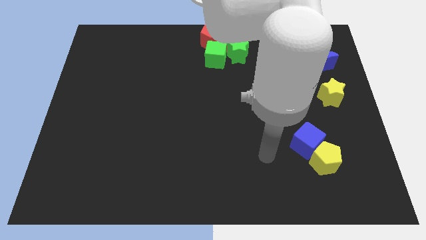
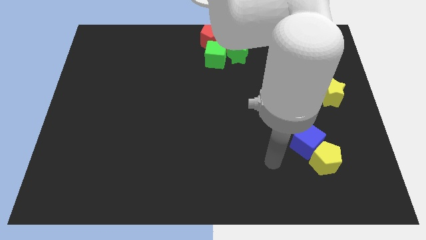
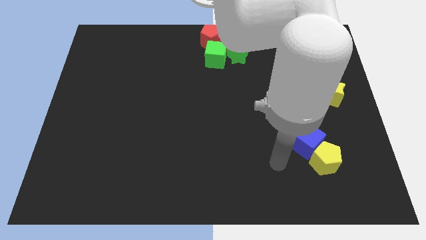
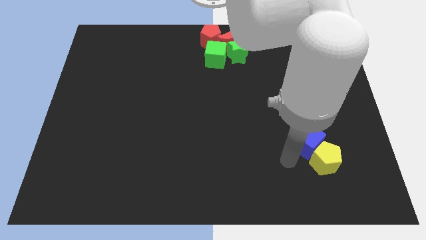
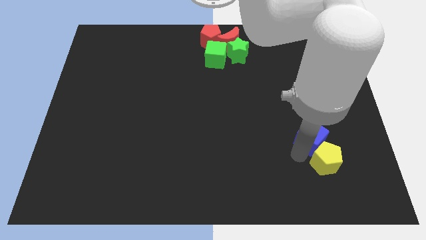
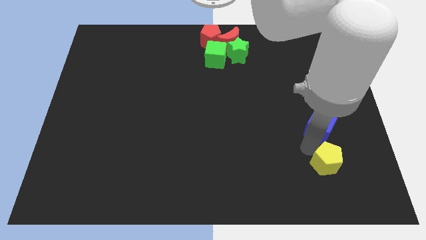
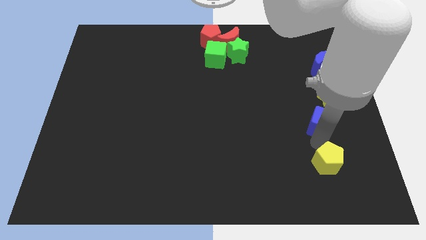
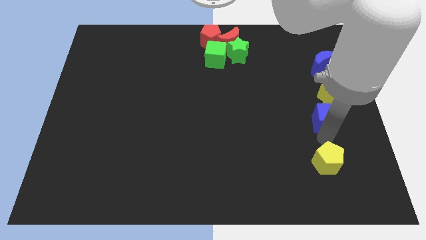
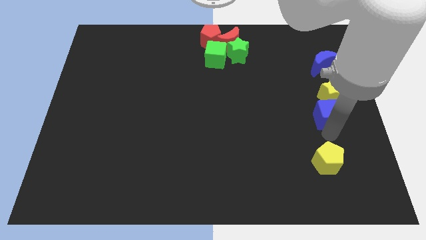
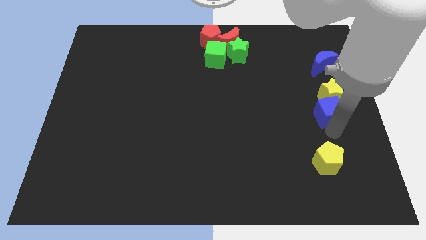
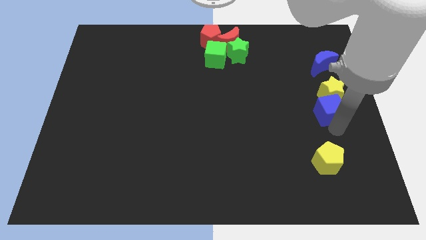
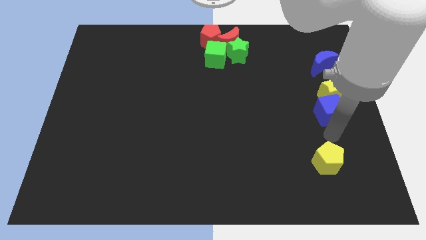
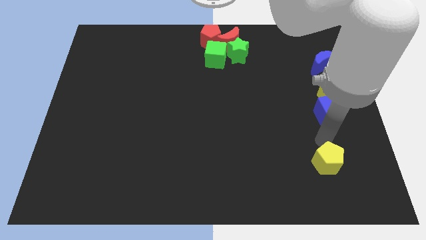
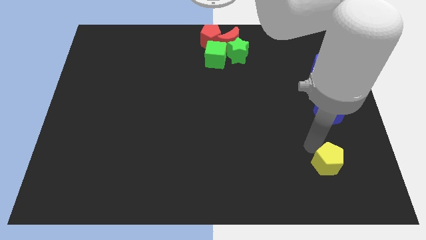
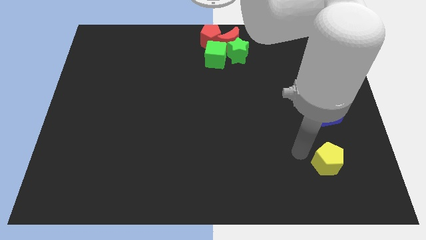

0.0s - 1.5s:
separate blue cube from the yellow pentagon

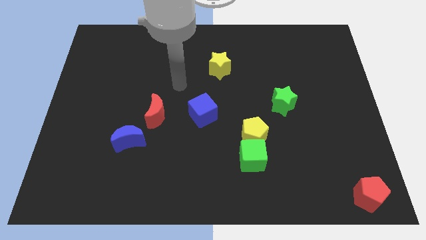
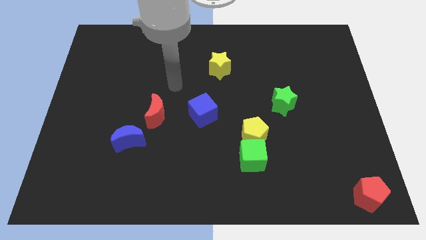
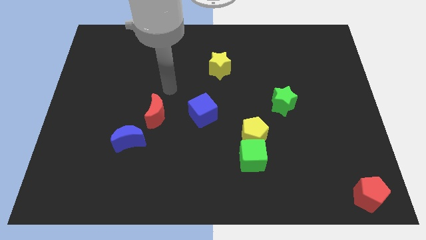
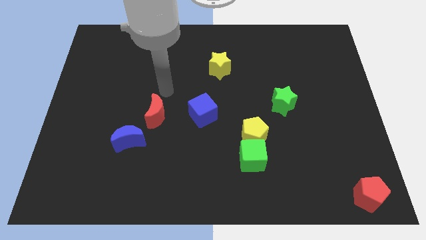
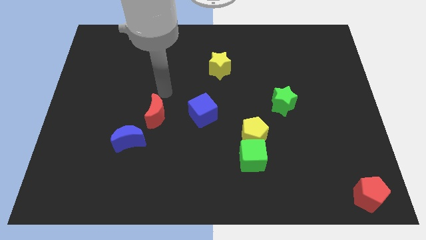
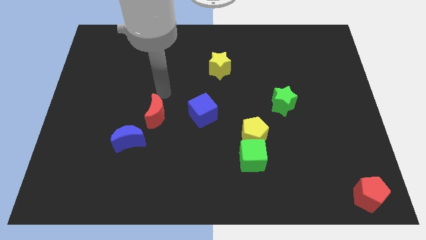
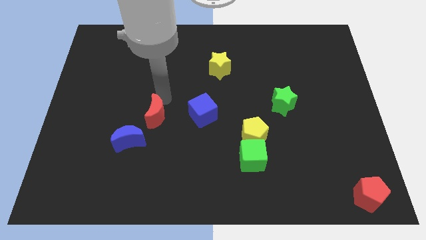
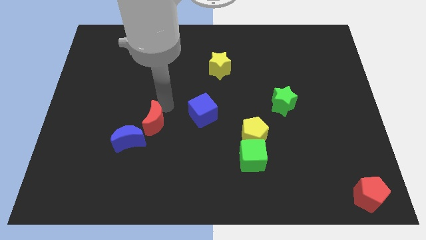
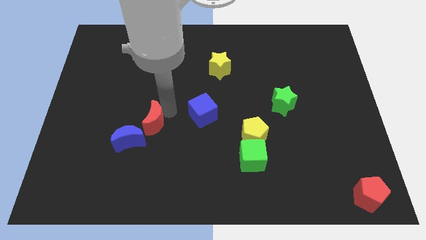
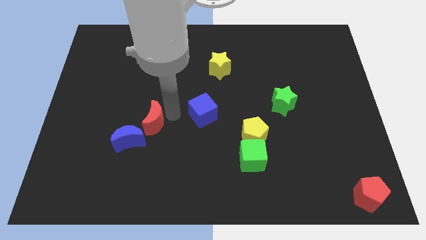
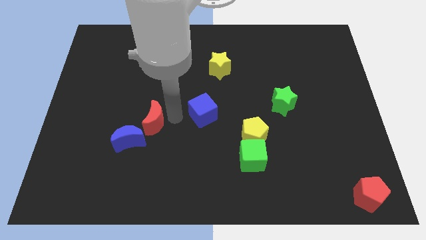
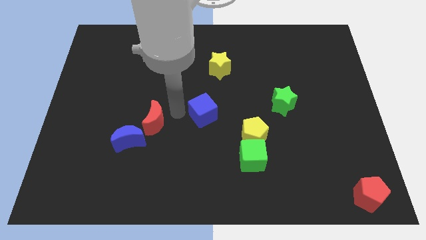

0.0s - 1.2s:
slide red moon into blue moon

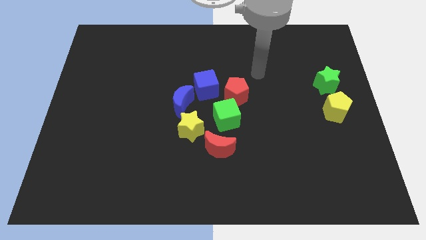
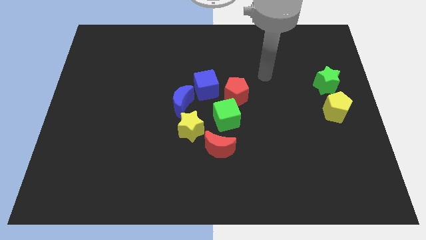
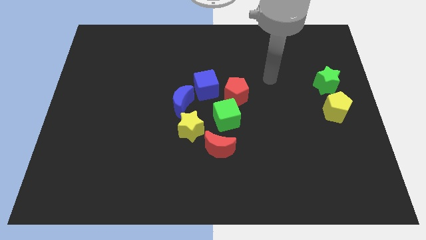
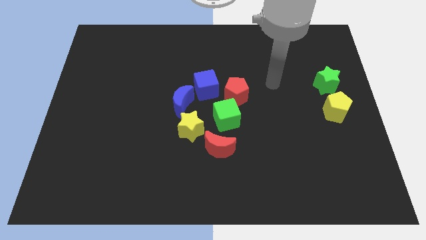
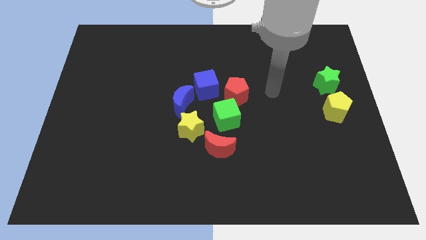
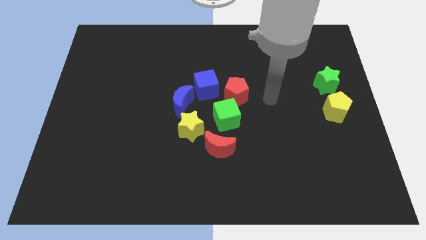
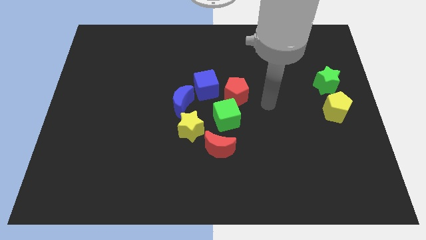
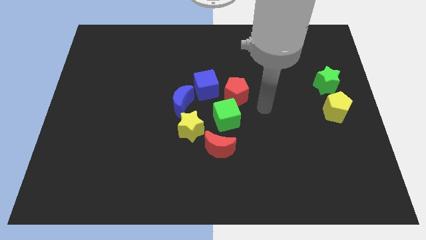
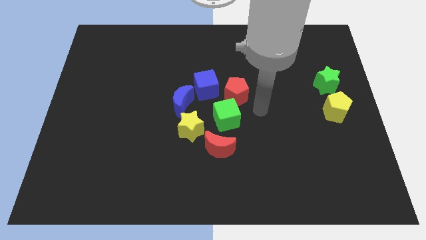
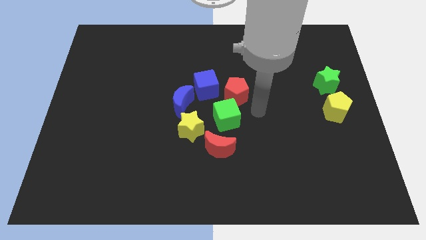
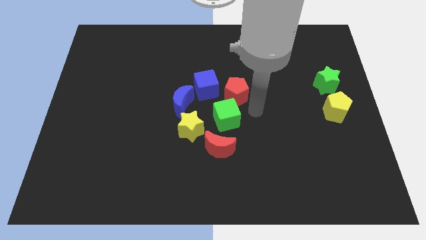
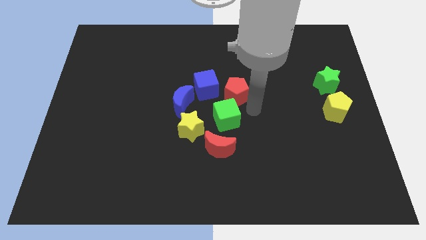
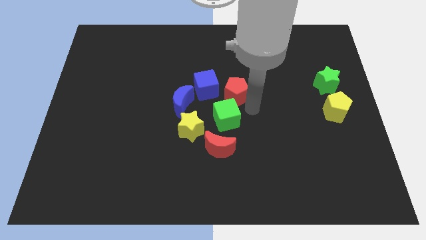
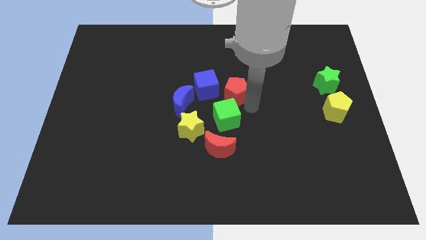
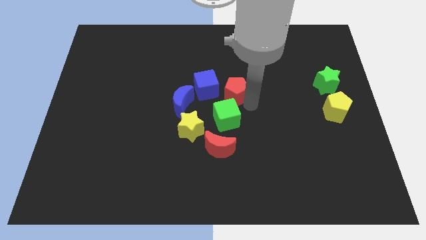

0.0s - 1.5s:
put your hand underneath the red pentagon

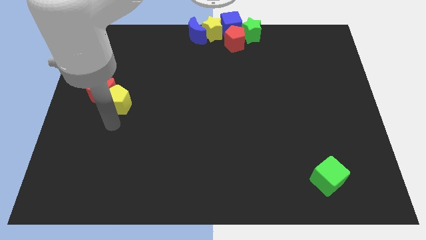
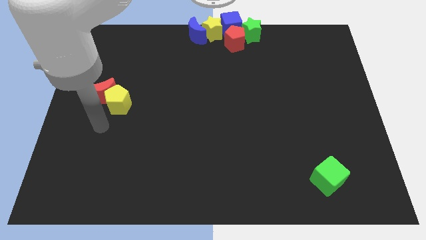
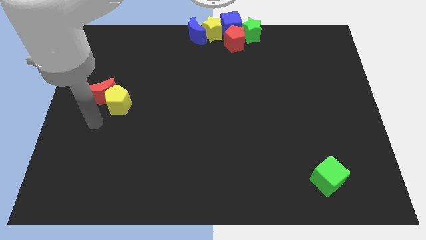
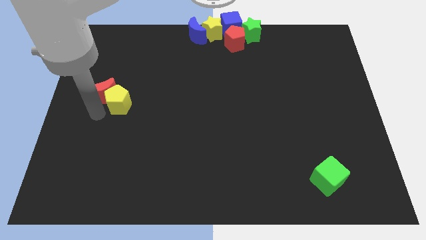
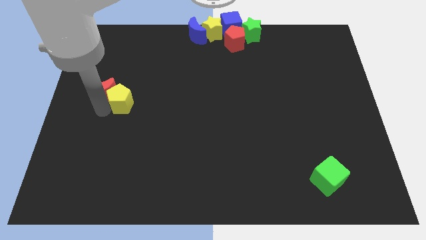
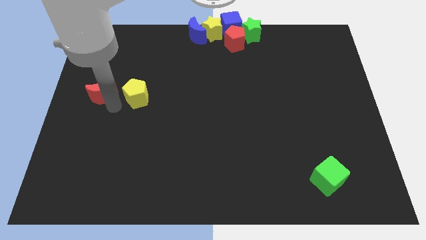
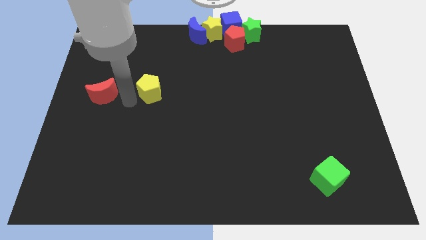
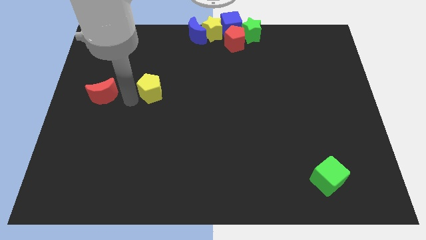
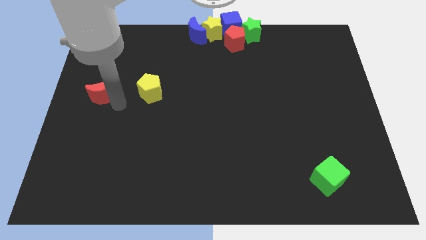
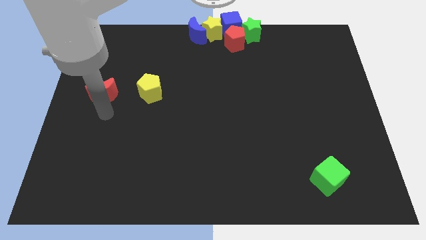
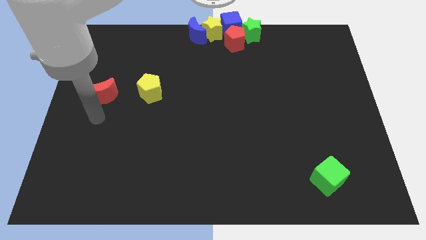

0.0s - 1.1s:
separate the yellow pentagon and red crescent

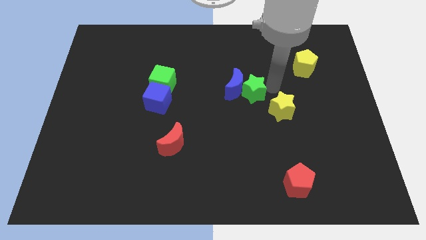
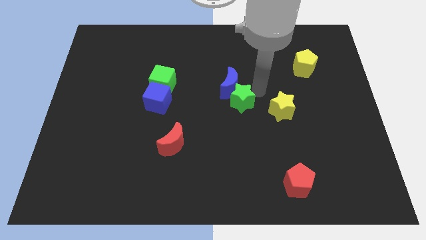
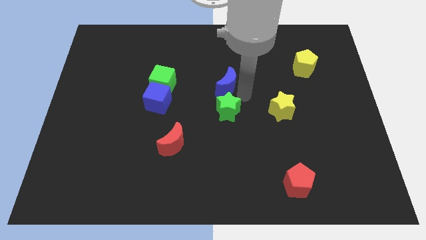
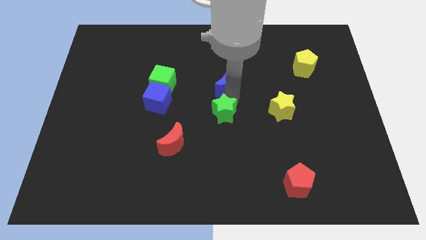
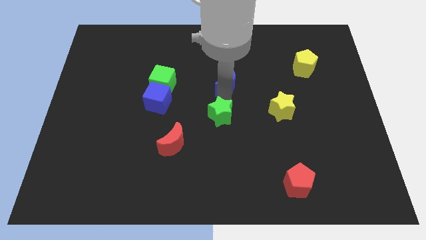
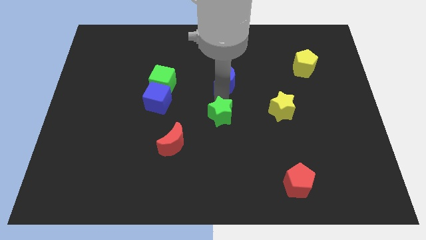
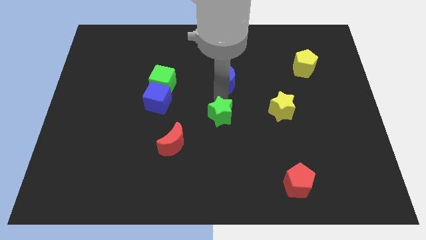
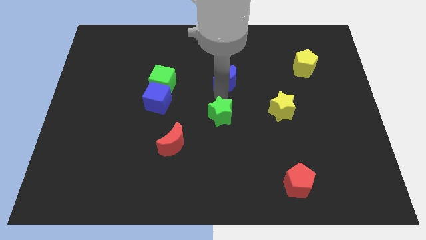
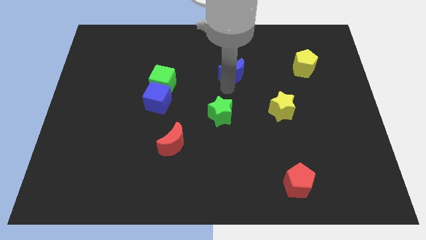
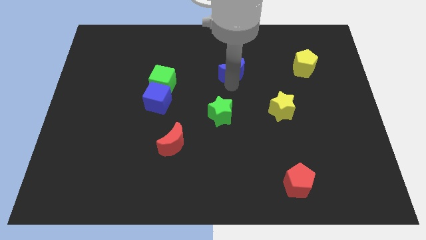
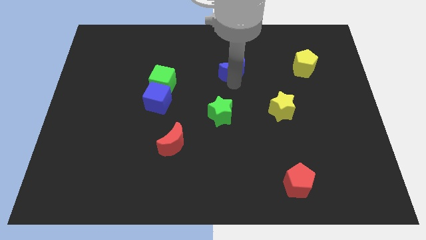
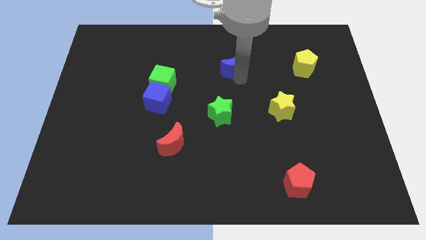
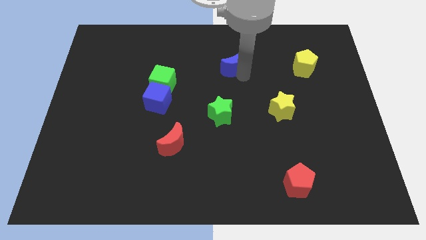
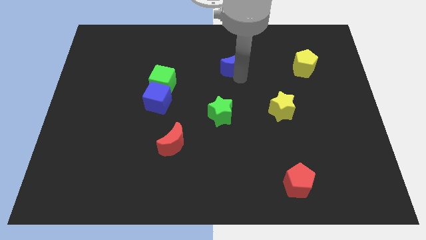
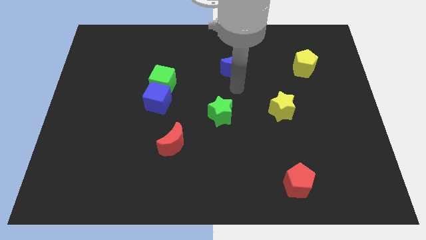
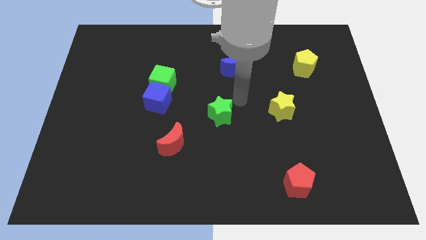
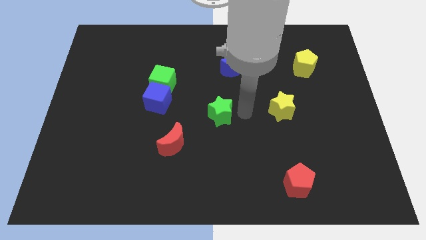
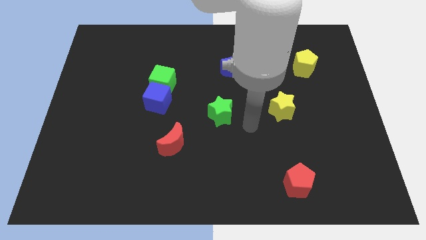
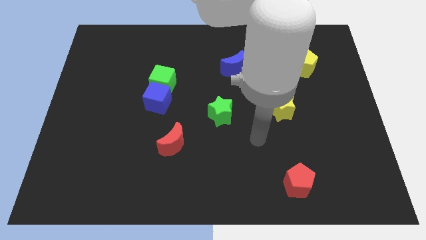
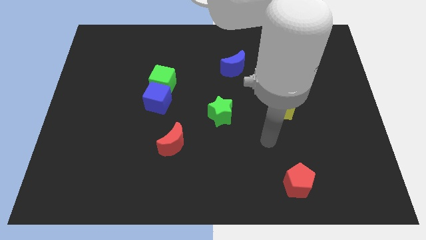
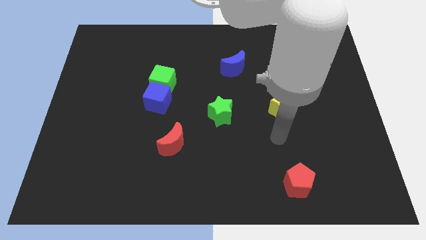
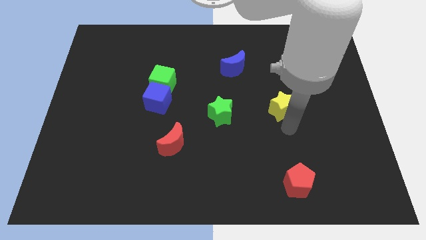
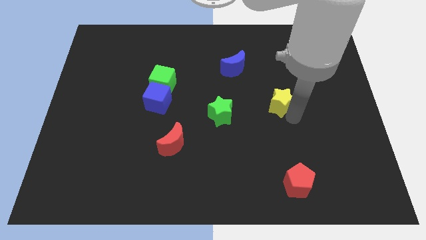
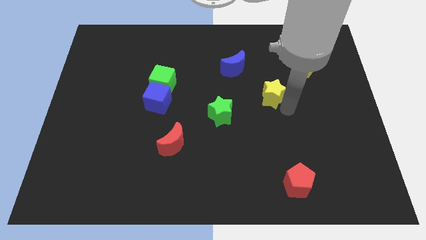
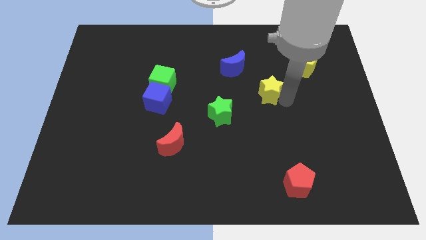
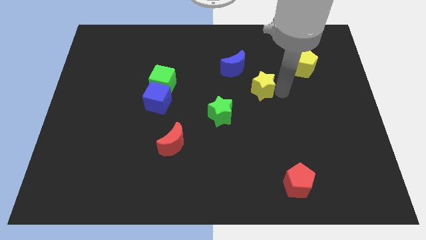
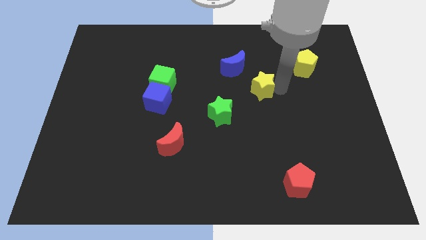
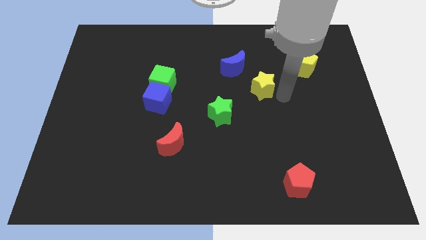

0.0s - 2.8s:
push the yellow star in between the yellow pentagon and the green star

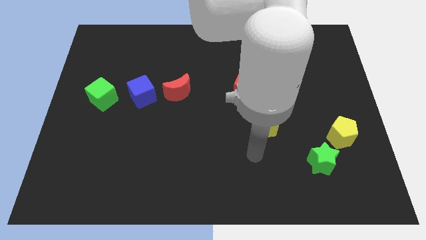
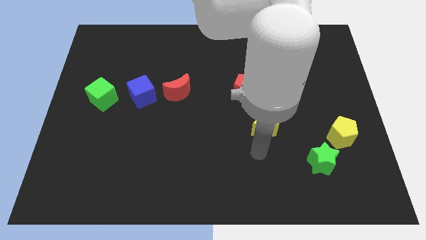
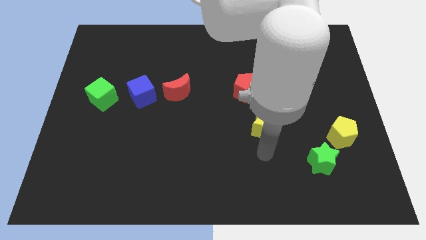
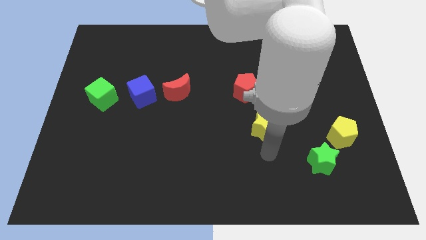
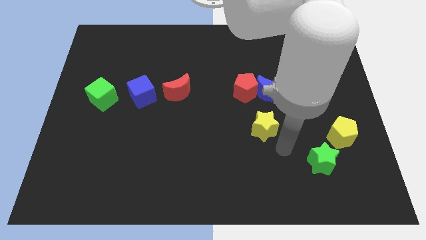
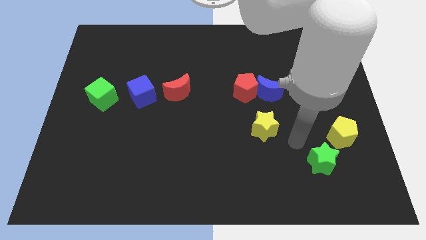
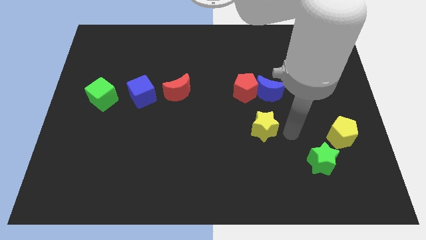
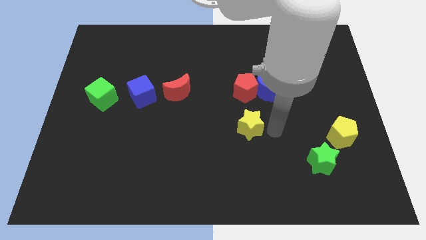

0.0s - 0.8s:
place the arm right to the yellow star
